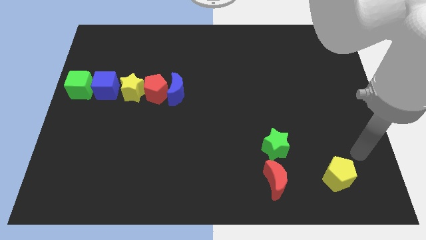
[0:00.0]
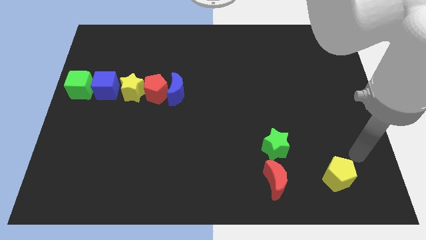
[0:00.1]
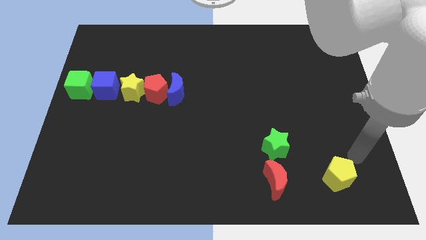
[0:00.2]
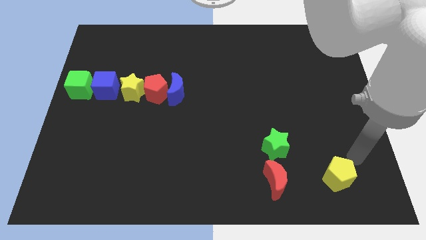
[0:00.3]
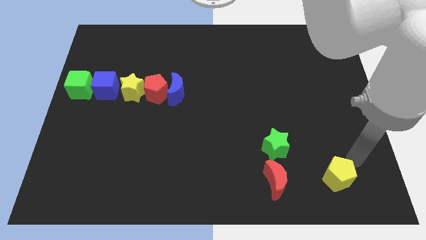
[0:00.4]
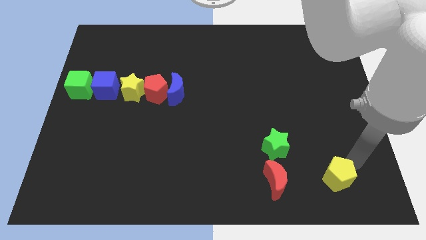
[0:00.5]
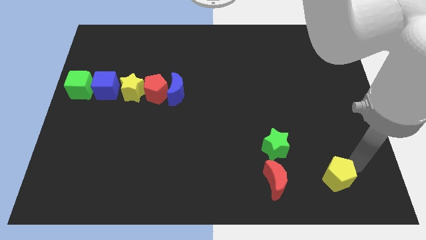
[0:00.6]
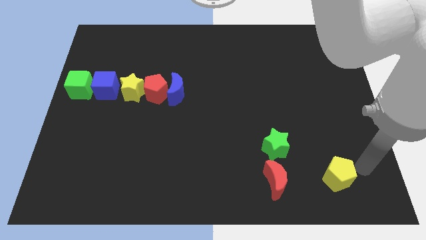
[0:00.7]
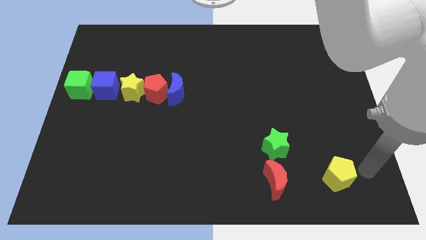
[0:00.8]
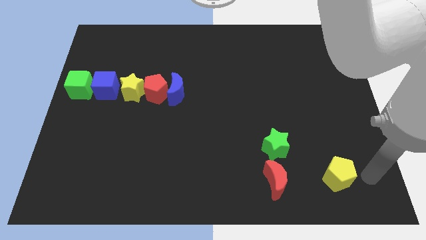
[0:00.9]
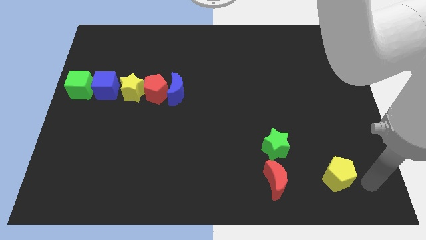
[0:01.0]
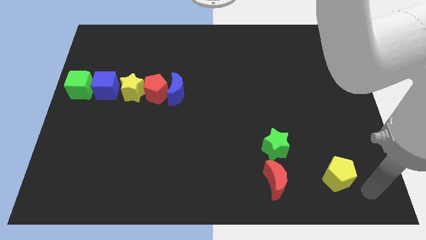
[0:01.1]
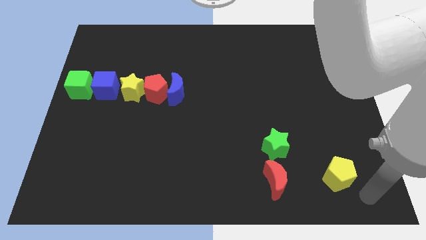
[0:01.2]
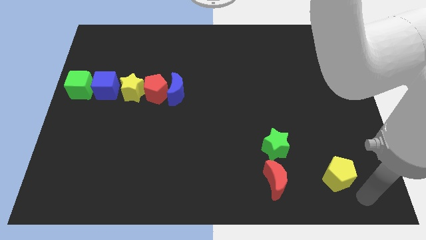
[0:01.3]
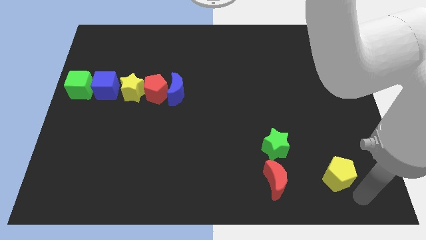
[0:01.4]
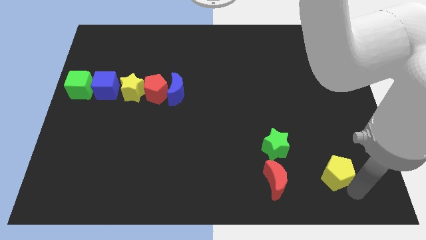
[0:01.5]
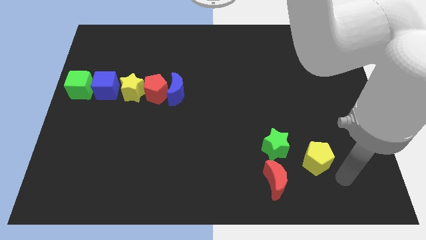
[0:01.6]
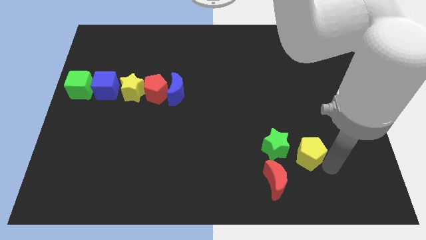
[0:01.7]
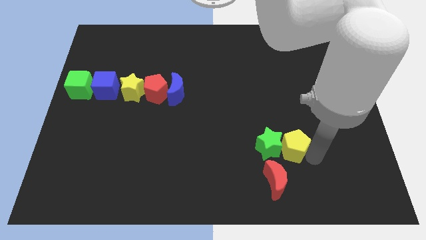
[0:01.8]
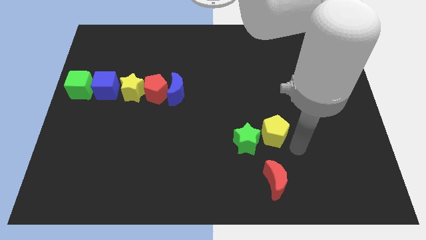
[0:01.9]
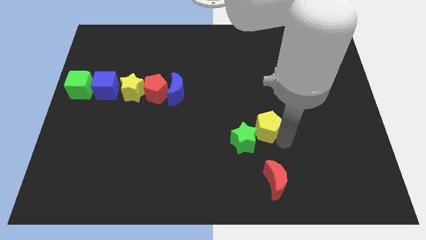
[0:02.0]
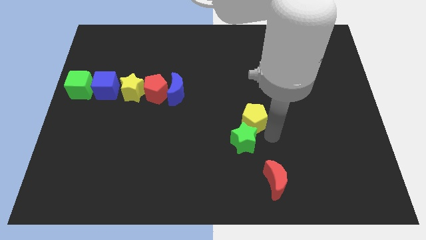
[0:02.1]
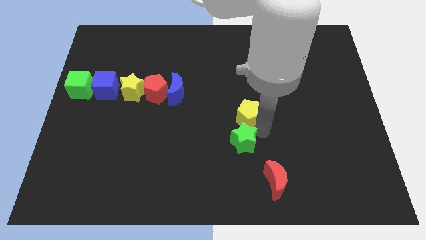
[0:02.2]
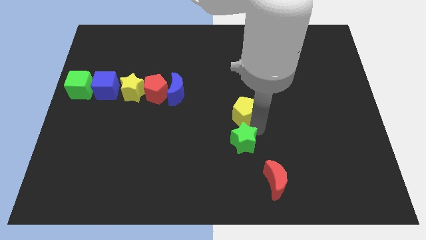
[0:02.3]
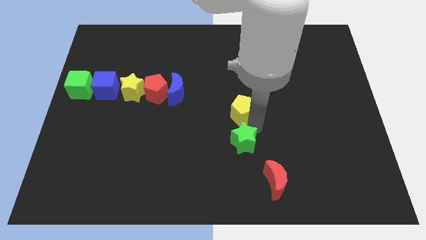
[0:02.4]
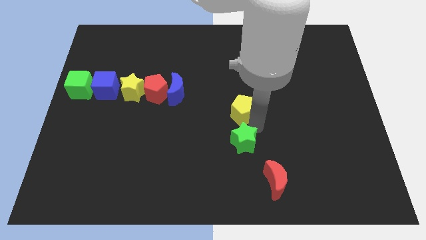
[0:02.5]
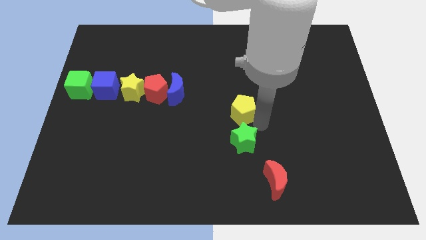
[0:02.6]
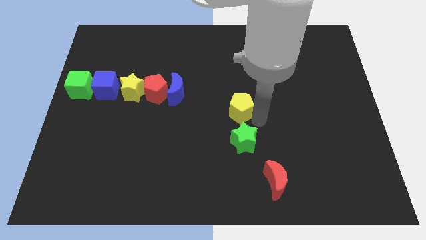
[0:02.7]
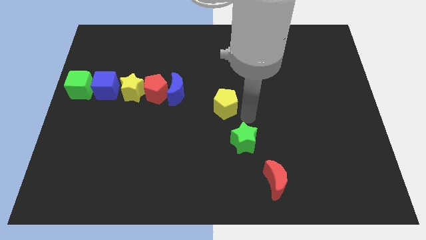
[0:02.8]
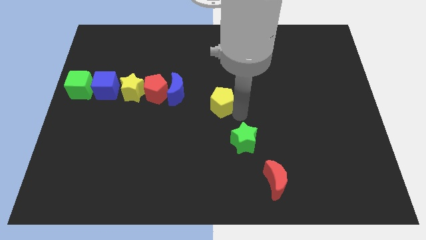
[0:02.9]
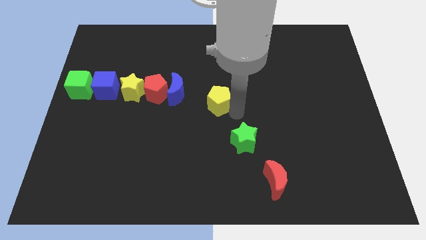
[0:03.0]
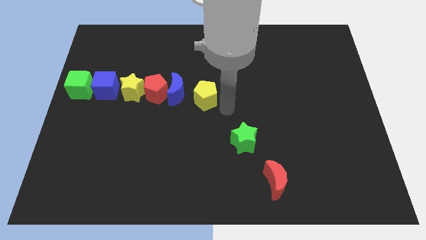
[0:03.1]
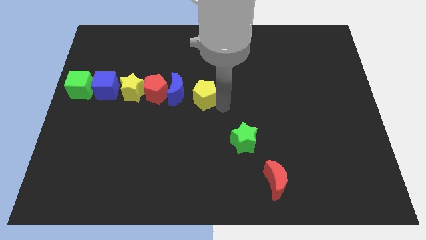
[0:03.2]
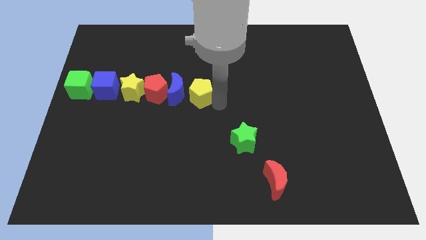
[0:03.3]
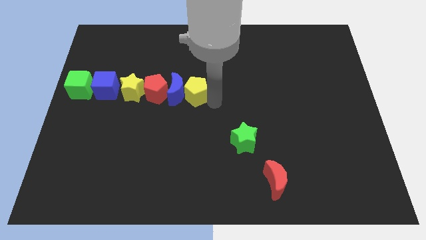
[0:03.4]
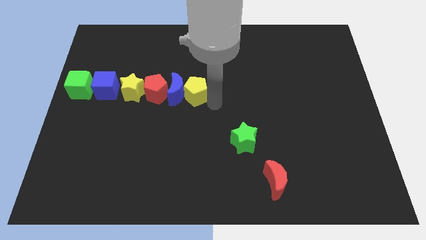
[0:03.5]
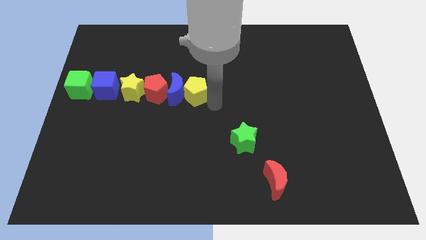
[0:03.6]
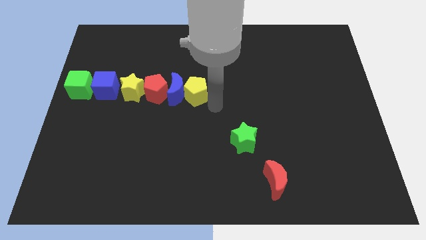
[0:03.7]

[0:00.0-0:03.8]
slide the yellow pentagon diagonally top left to the green star

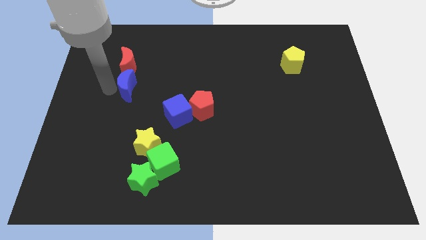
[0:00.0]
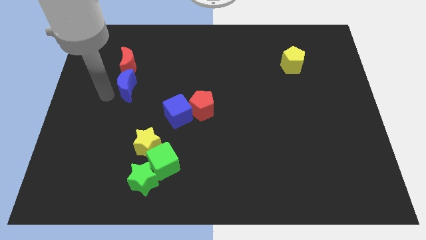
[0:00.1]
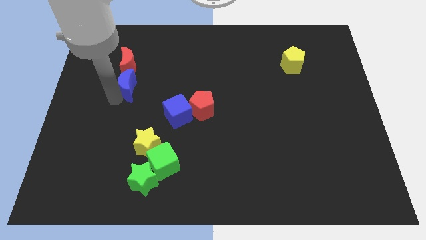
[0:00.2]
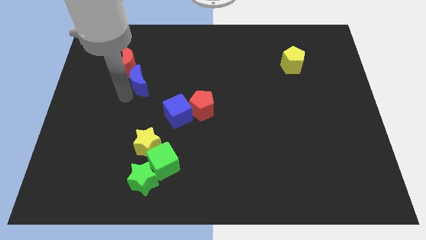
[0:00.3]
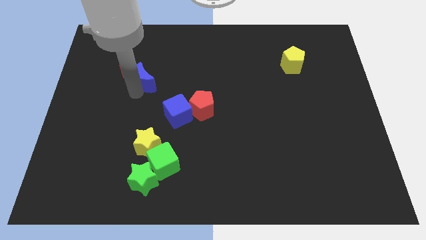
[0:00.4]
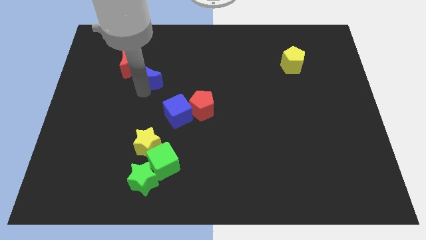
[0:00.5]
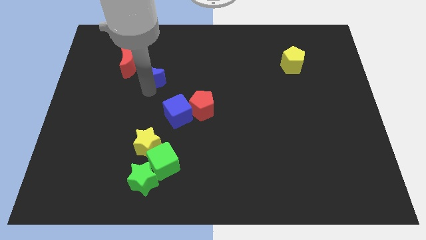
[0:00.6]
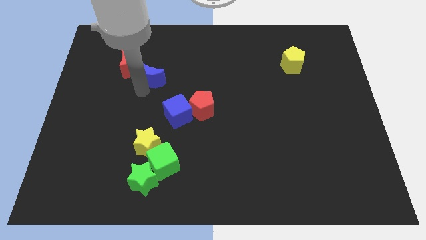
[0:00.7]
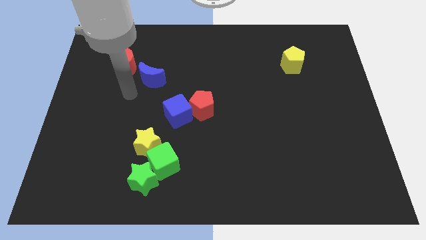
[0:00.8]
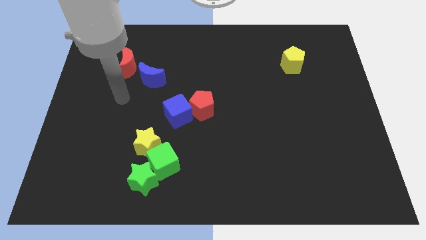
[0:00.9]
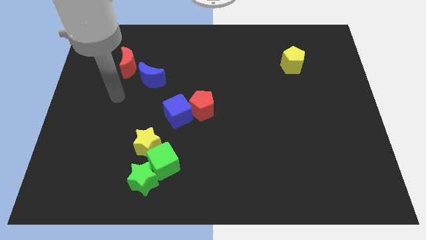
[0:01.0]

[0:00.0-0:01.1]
separate blue crescent from the red crescent

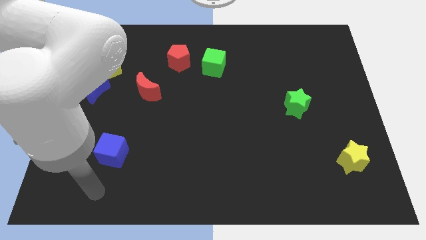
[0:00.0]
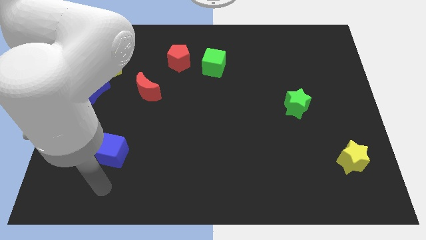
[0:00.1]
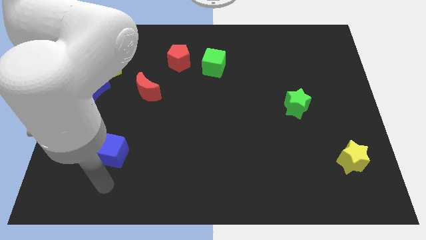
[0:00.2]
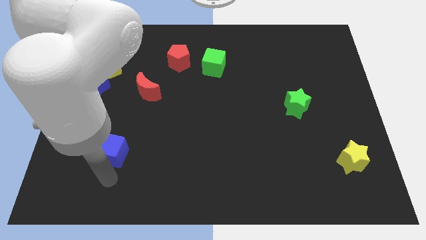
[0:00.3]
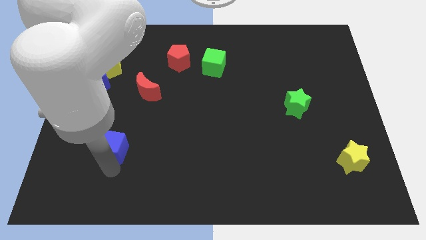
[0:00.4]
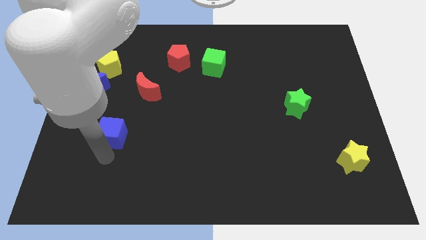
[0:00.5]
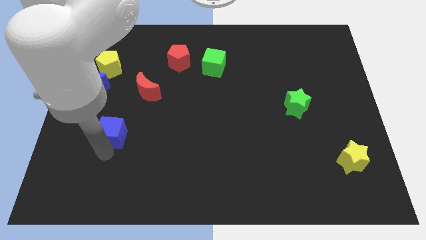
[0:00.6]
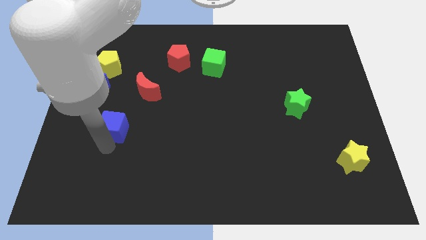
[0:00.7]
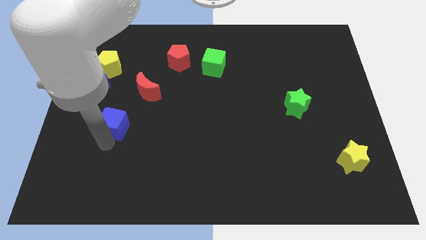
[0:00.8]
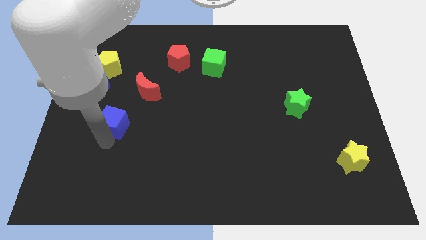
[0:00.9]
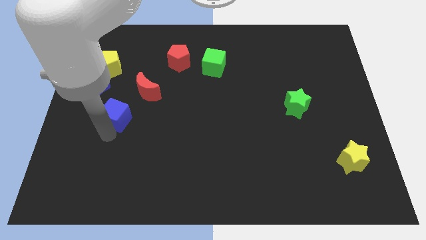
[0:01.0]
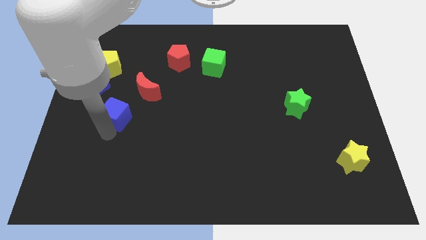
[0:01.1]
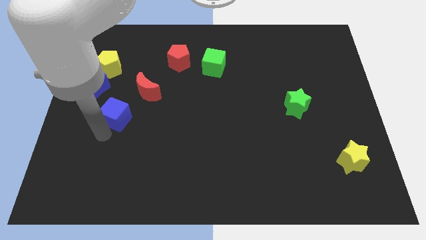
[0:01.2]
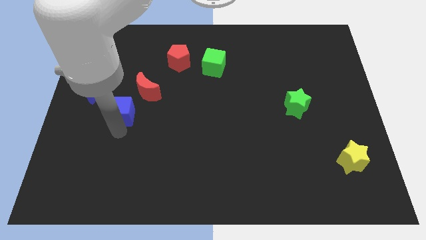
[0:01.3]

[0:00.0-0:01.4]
move blue cube close to blue moon

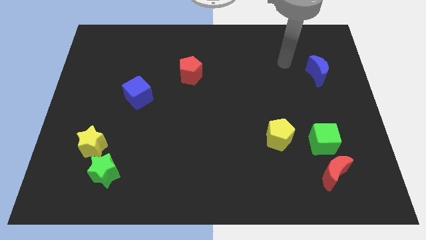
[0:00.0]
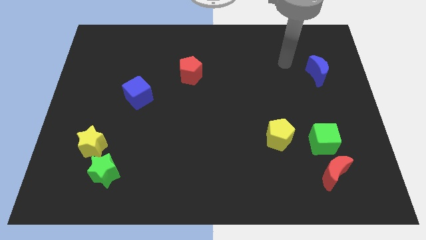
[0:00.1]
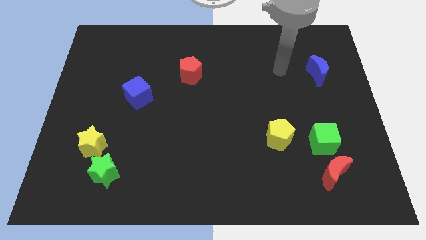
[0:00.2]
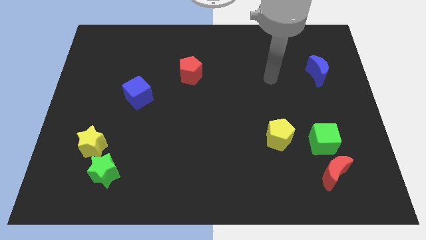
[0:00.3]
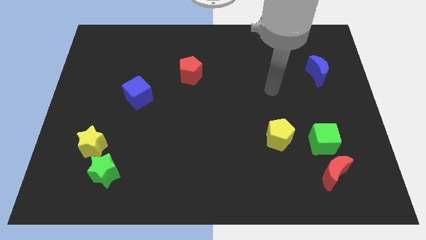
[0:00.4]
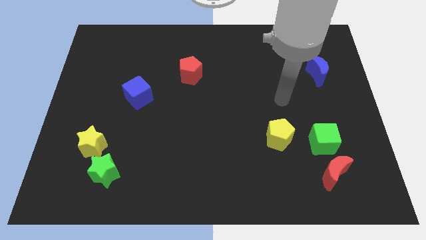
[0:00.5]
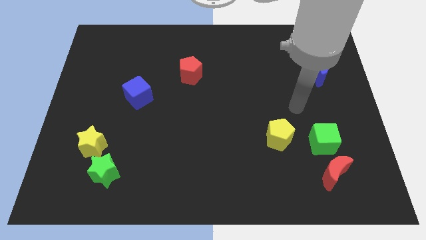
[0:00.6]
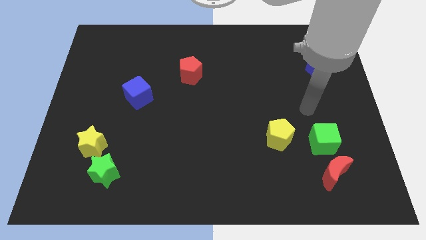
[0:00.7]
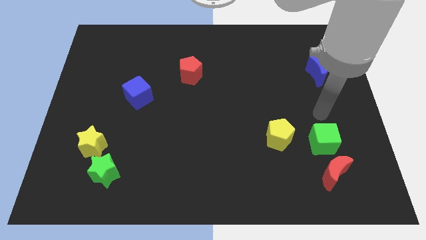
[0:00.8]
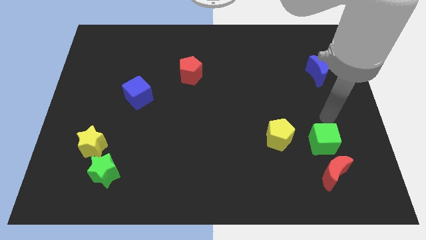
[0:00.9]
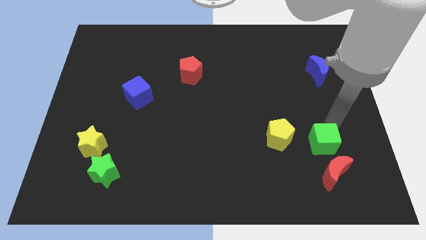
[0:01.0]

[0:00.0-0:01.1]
point your arm at the top of the green cube

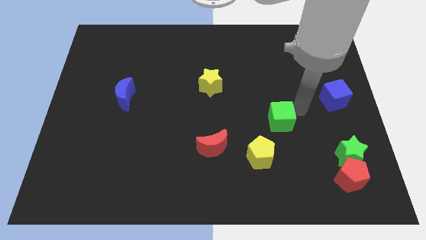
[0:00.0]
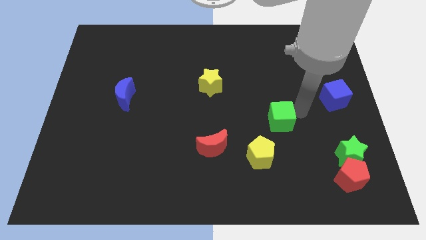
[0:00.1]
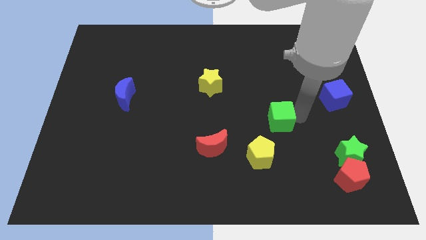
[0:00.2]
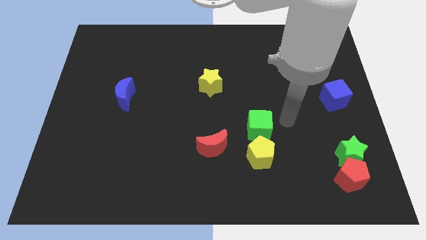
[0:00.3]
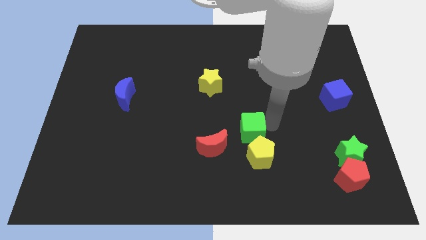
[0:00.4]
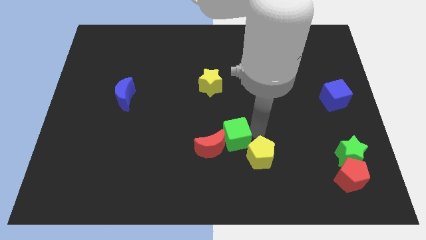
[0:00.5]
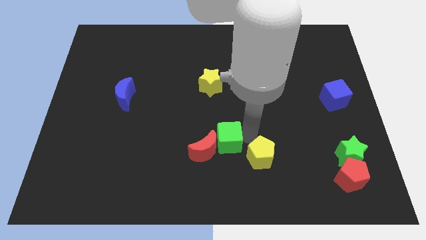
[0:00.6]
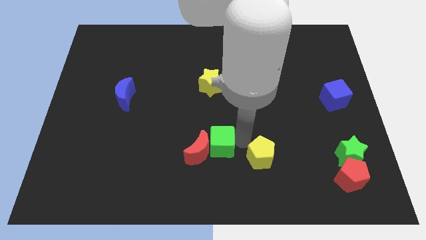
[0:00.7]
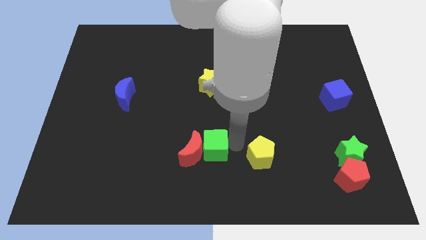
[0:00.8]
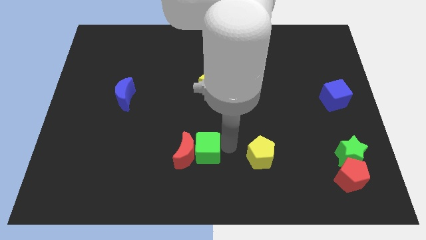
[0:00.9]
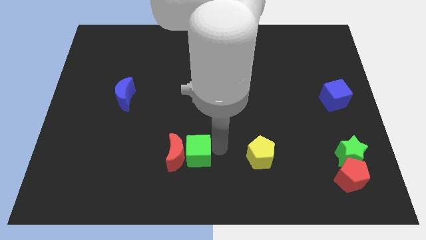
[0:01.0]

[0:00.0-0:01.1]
add green cube into red moon

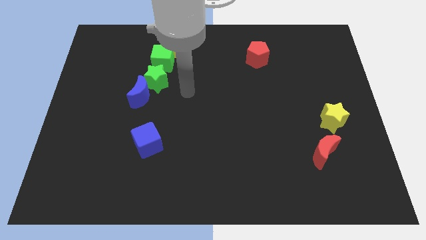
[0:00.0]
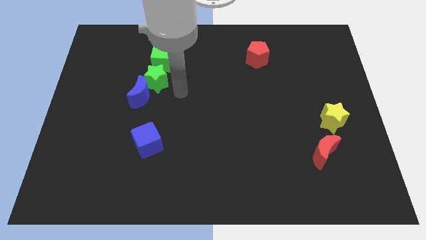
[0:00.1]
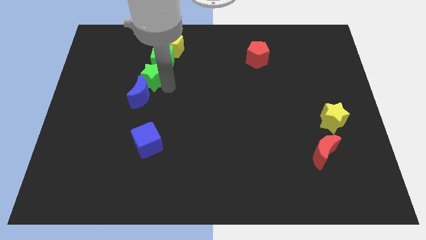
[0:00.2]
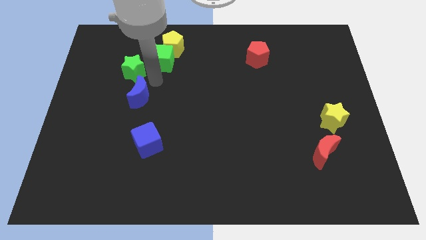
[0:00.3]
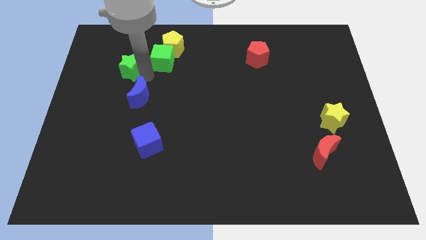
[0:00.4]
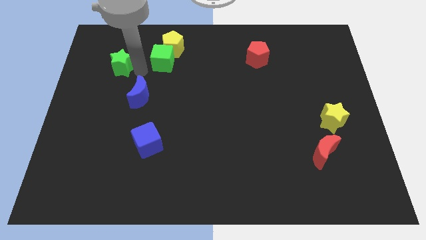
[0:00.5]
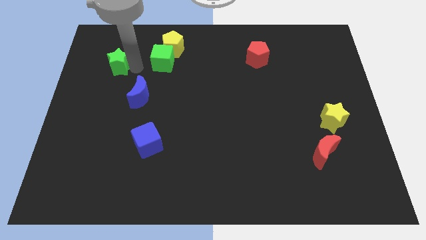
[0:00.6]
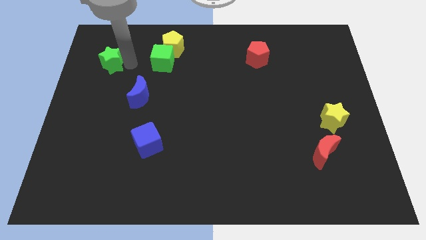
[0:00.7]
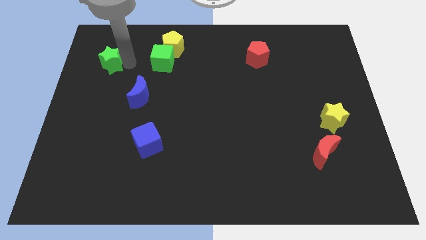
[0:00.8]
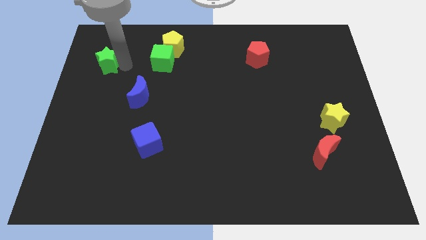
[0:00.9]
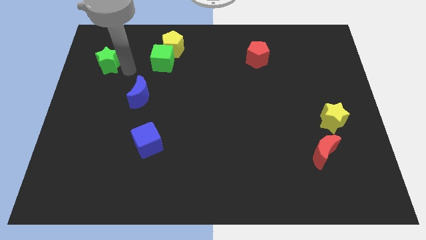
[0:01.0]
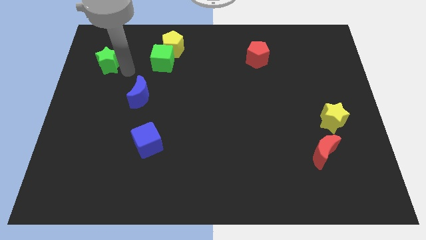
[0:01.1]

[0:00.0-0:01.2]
place green star to the left of the green cube
